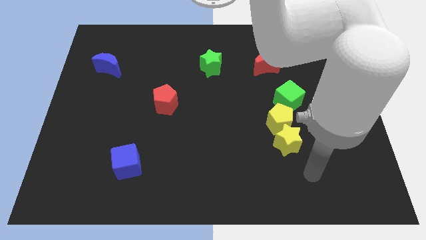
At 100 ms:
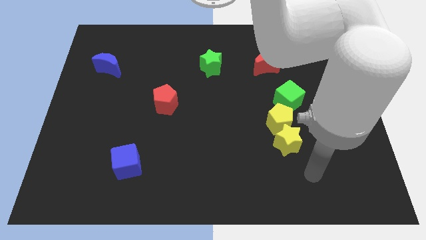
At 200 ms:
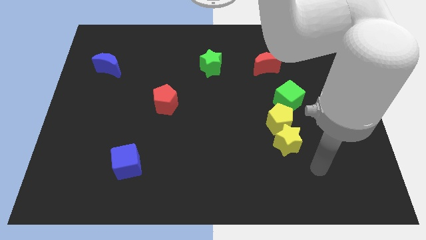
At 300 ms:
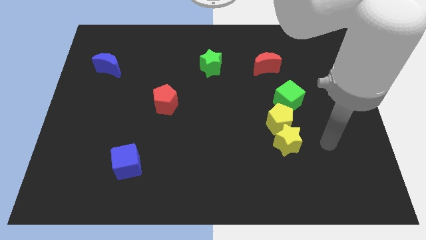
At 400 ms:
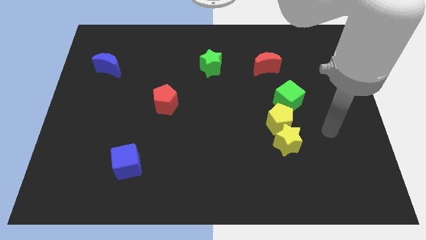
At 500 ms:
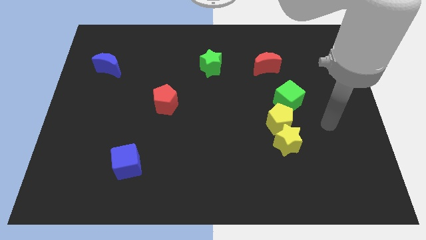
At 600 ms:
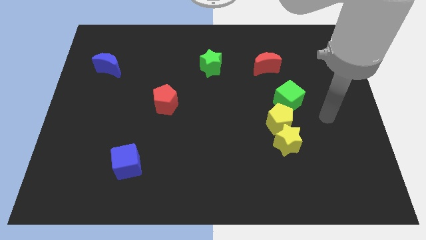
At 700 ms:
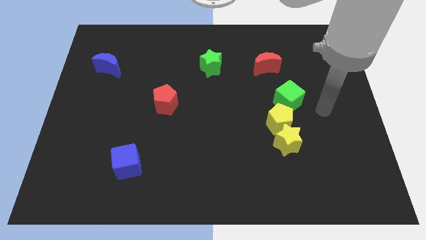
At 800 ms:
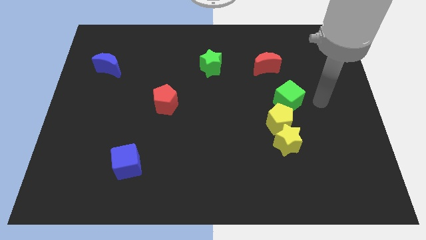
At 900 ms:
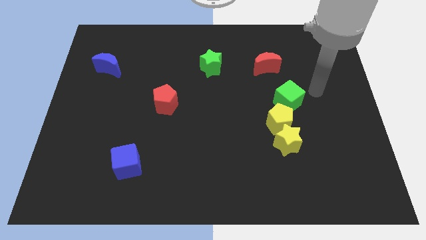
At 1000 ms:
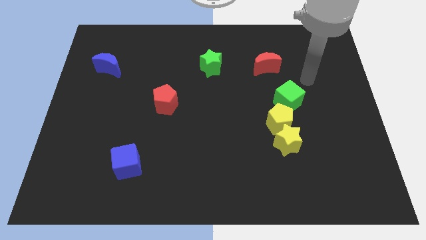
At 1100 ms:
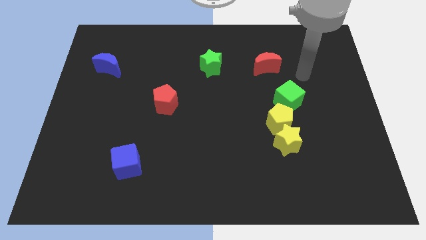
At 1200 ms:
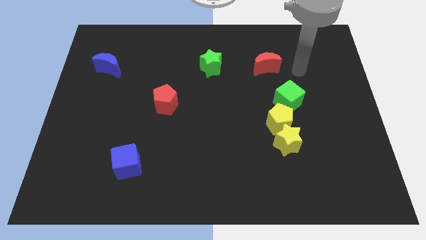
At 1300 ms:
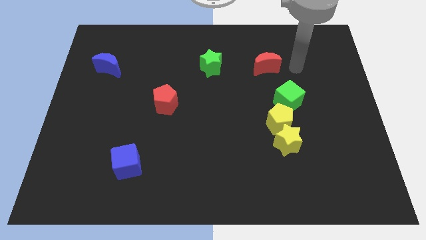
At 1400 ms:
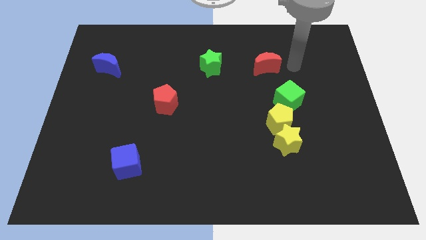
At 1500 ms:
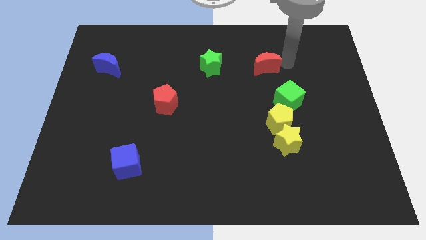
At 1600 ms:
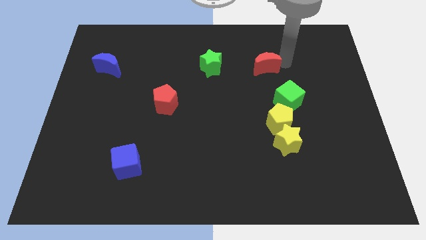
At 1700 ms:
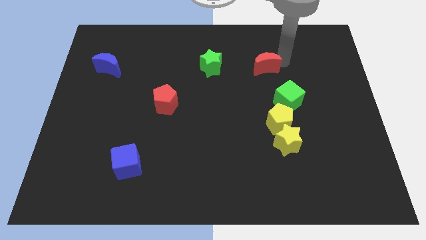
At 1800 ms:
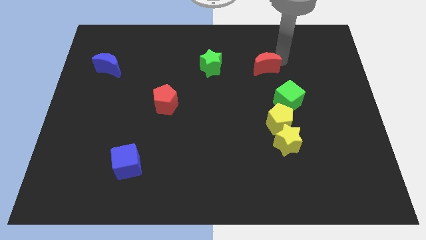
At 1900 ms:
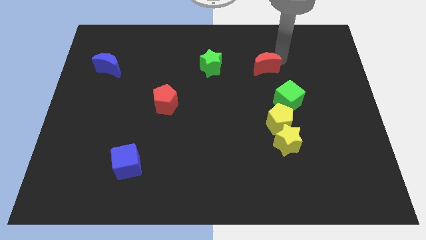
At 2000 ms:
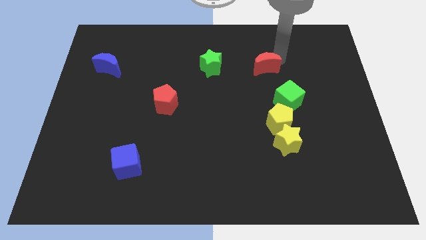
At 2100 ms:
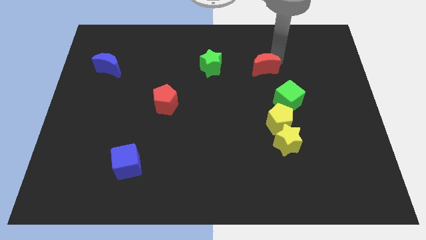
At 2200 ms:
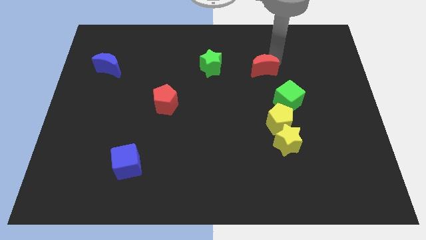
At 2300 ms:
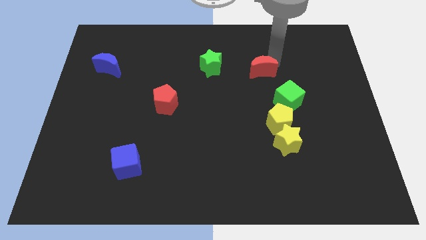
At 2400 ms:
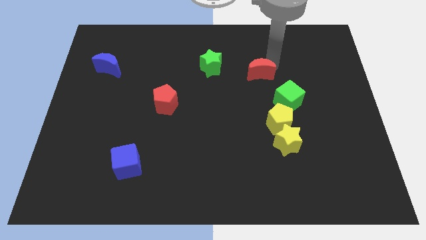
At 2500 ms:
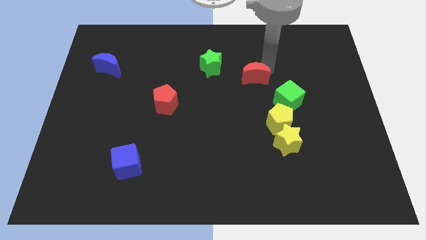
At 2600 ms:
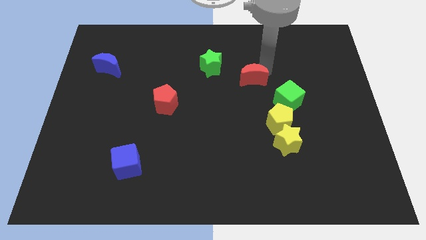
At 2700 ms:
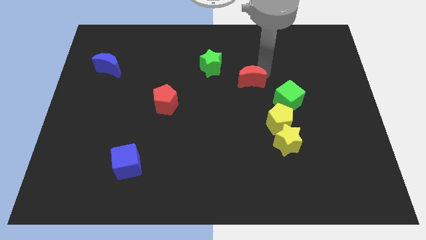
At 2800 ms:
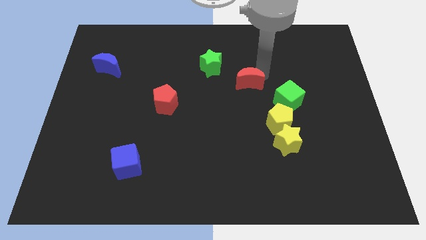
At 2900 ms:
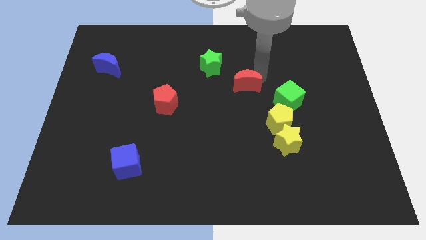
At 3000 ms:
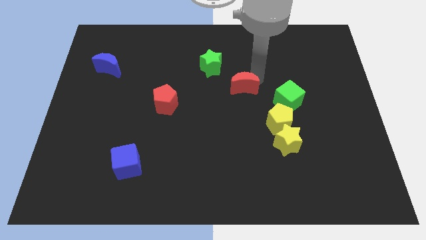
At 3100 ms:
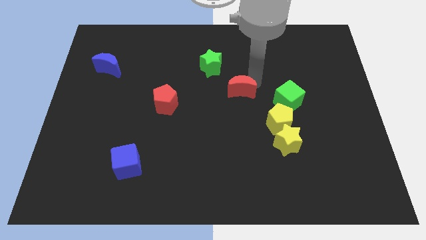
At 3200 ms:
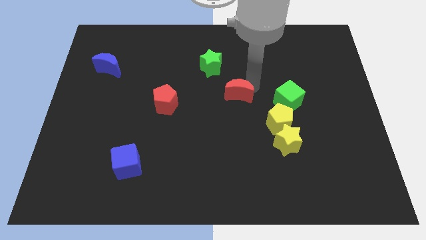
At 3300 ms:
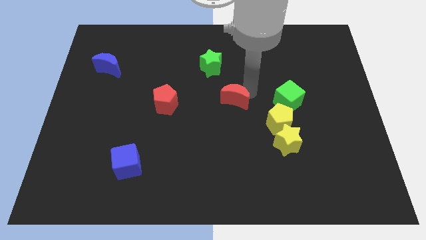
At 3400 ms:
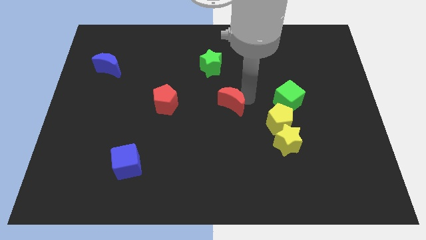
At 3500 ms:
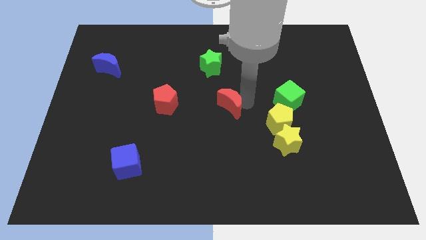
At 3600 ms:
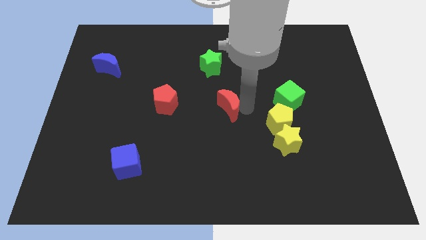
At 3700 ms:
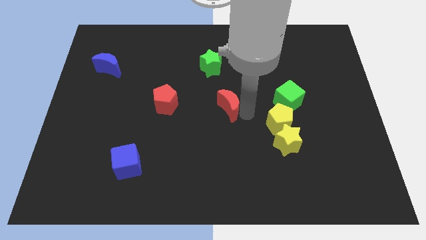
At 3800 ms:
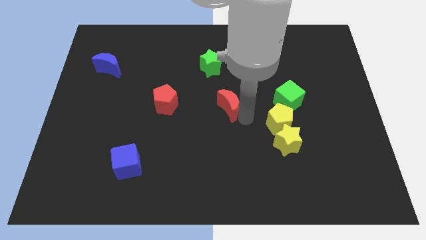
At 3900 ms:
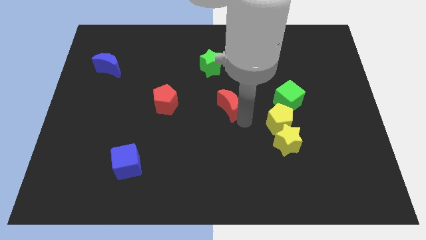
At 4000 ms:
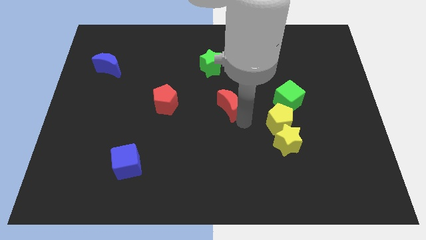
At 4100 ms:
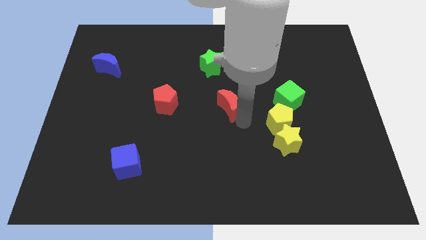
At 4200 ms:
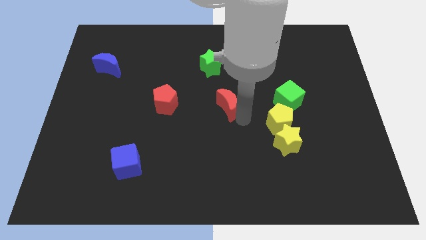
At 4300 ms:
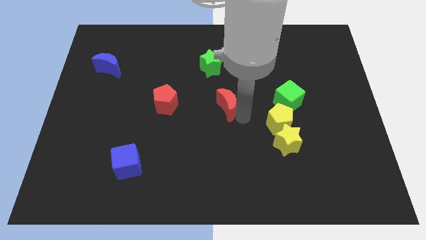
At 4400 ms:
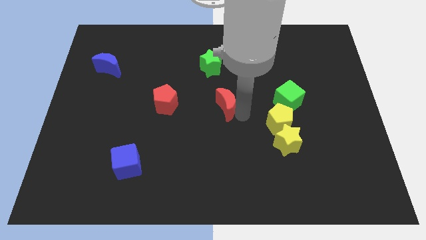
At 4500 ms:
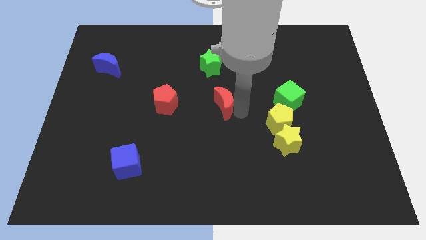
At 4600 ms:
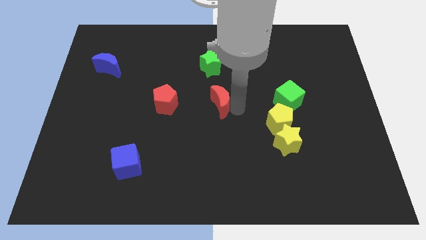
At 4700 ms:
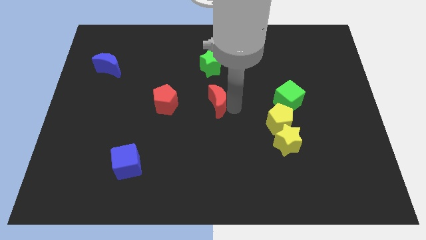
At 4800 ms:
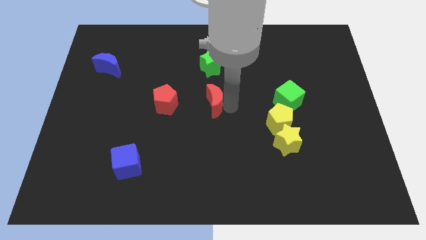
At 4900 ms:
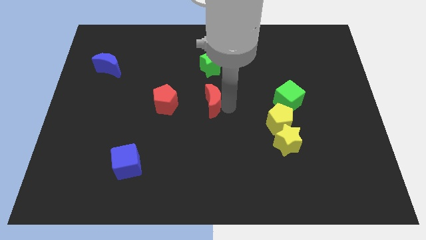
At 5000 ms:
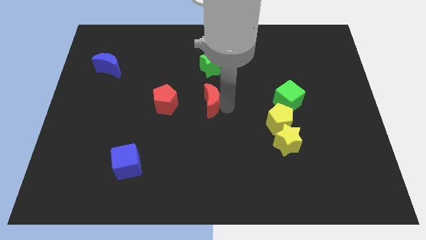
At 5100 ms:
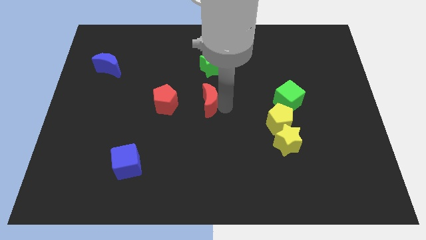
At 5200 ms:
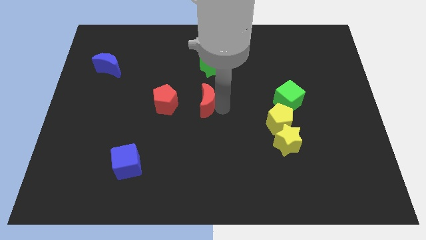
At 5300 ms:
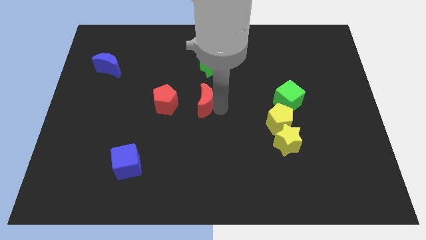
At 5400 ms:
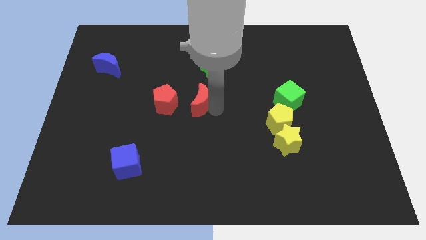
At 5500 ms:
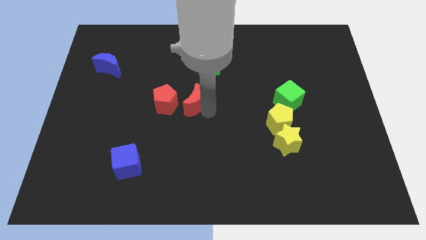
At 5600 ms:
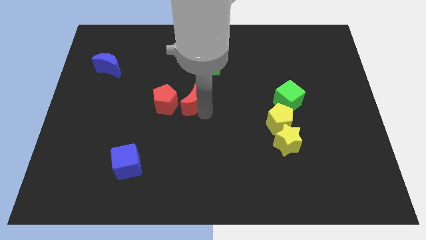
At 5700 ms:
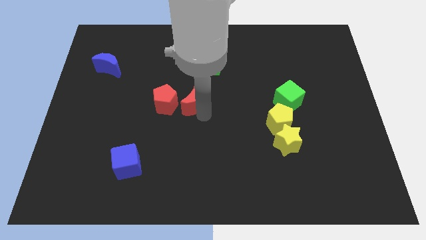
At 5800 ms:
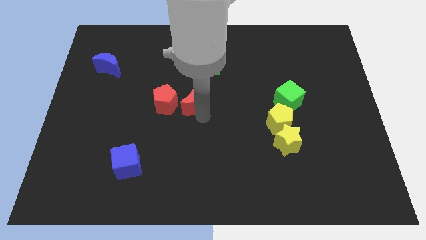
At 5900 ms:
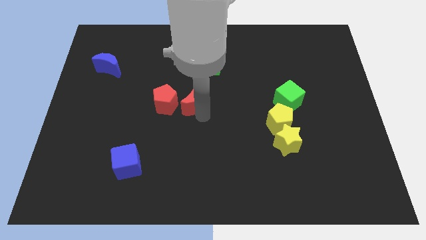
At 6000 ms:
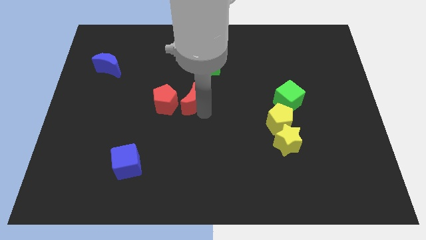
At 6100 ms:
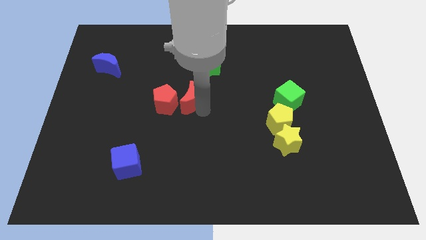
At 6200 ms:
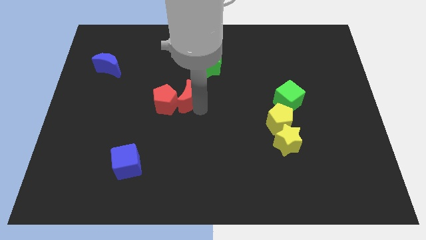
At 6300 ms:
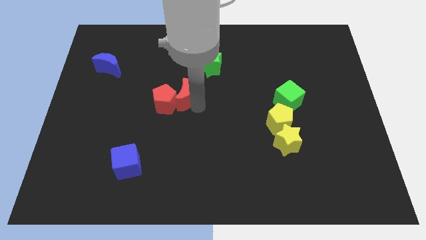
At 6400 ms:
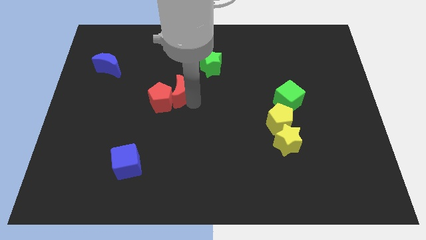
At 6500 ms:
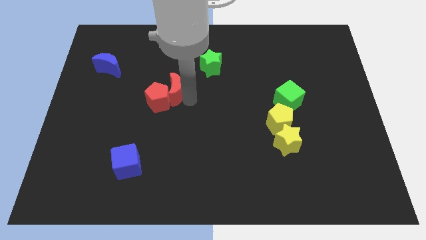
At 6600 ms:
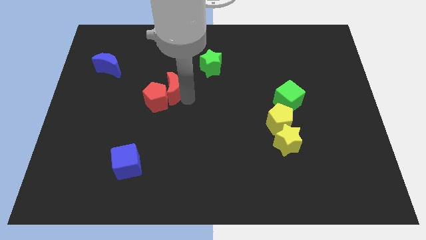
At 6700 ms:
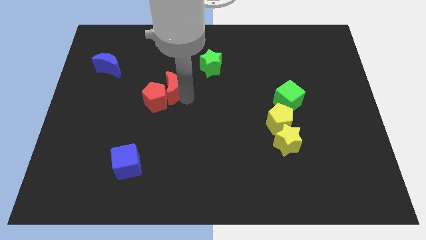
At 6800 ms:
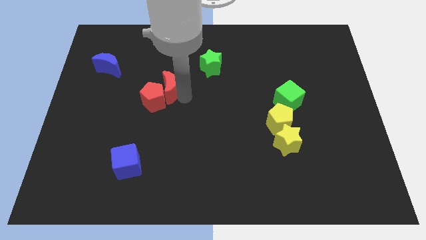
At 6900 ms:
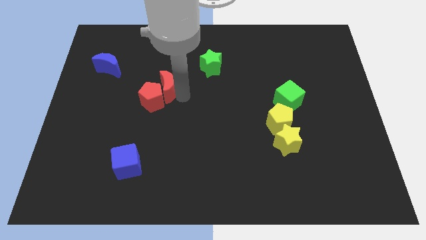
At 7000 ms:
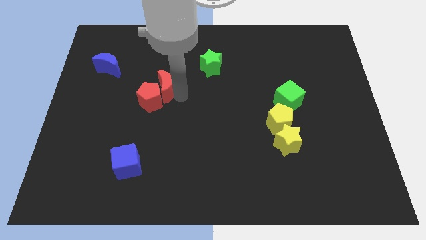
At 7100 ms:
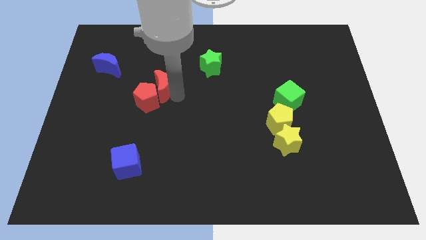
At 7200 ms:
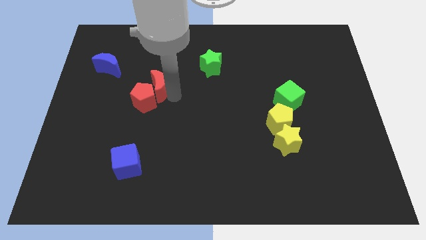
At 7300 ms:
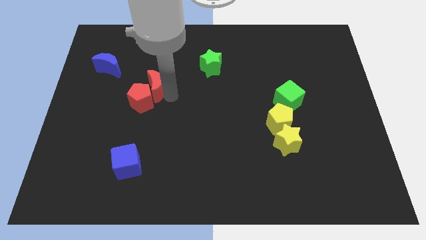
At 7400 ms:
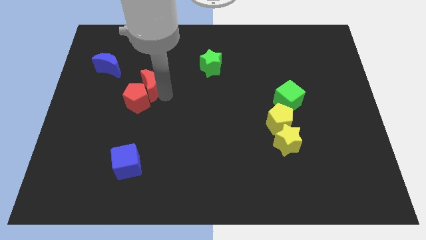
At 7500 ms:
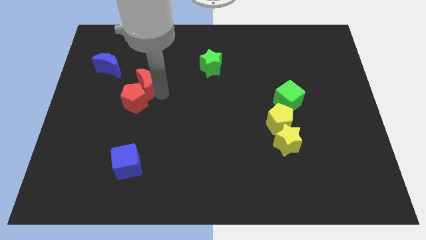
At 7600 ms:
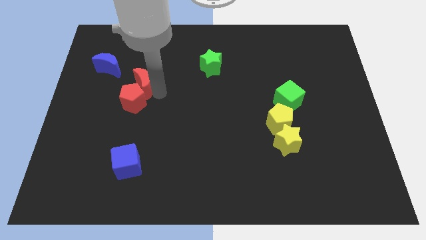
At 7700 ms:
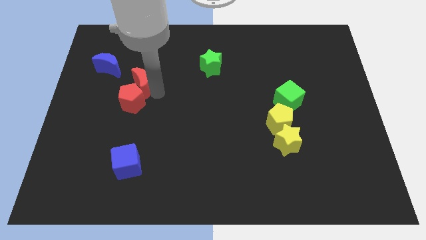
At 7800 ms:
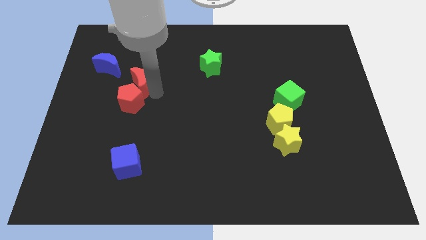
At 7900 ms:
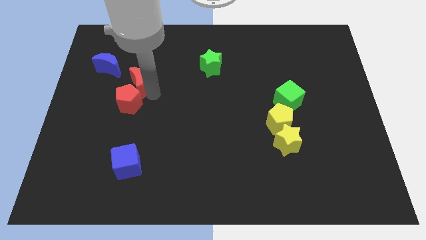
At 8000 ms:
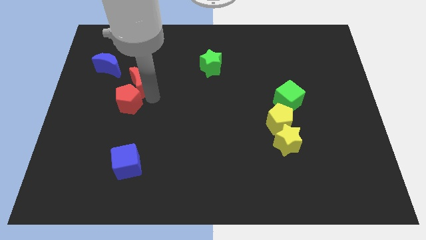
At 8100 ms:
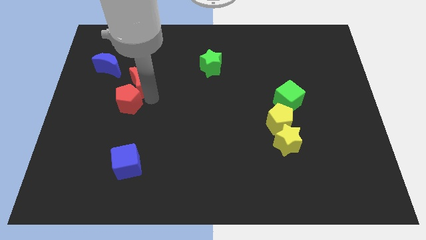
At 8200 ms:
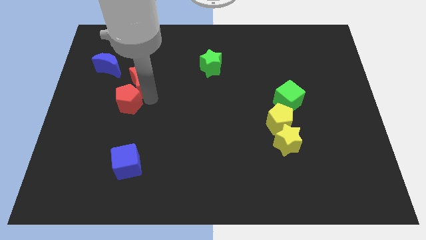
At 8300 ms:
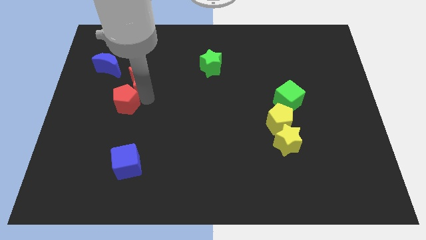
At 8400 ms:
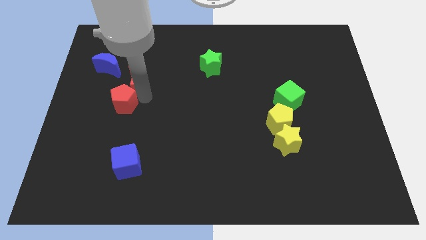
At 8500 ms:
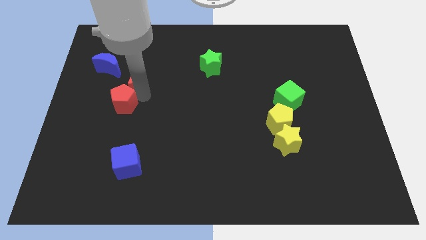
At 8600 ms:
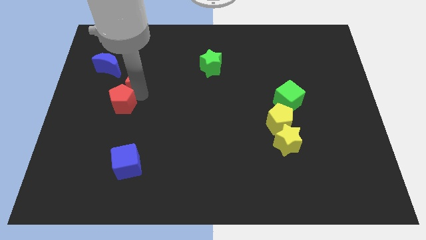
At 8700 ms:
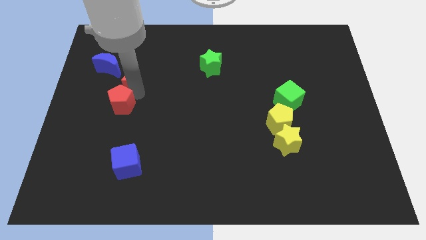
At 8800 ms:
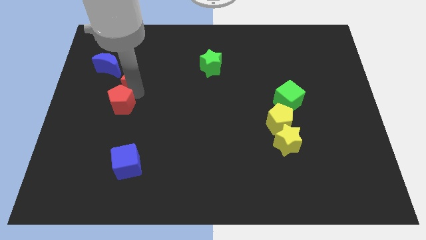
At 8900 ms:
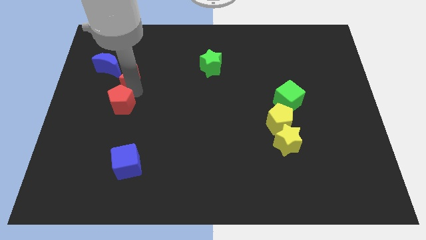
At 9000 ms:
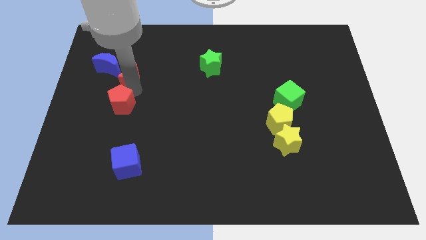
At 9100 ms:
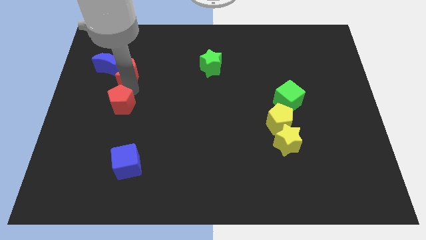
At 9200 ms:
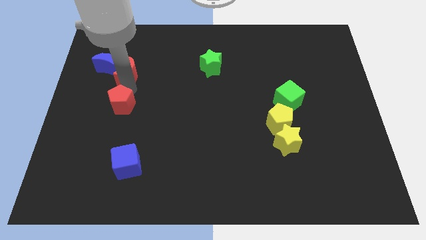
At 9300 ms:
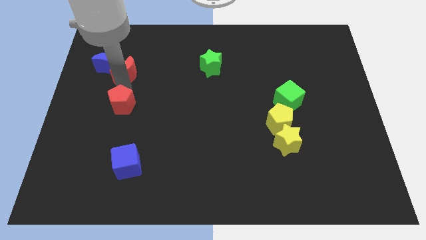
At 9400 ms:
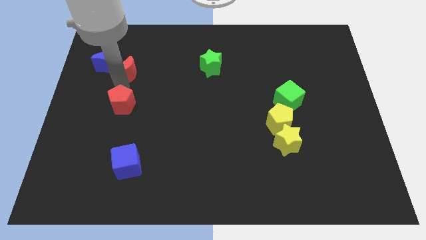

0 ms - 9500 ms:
slide the red moon close to the blue moon
